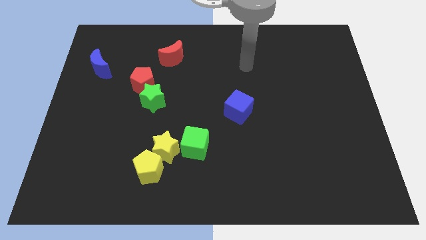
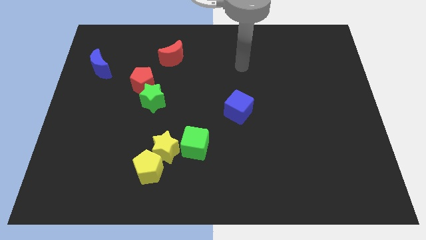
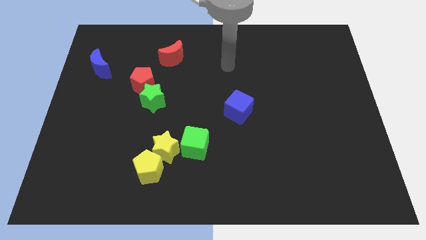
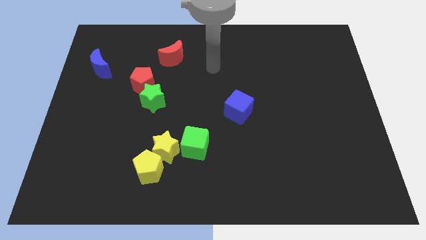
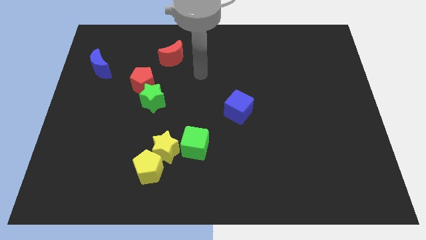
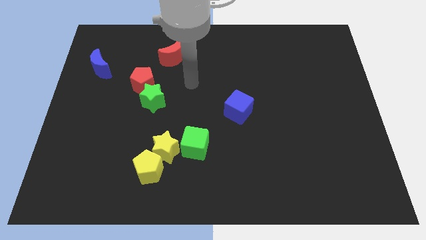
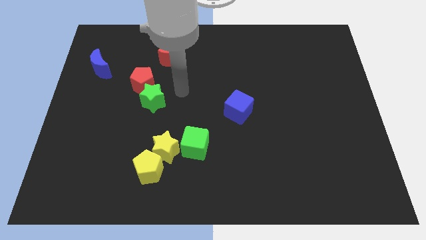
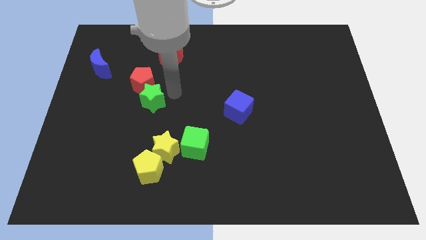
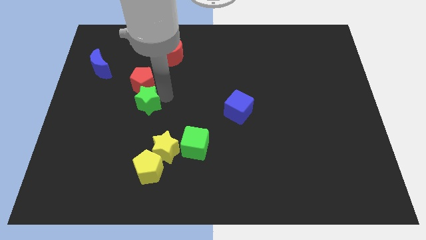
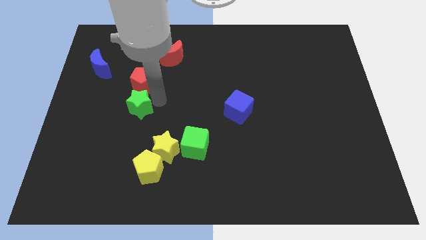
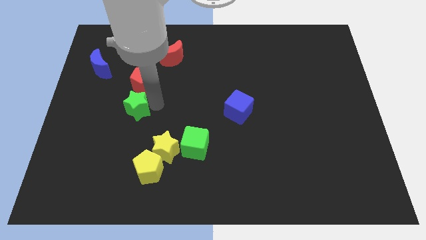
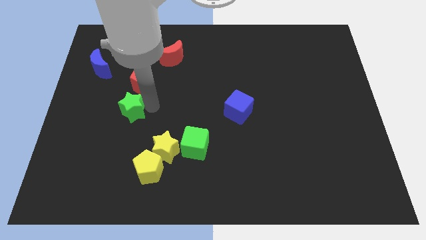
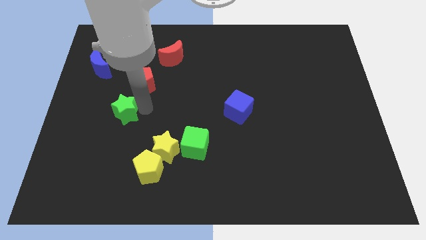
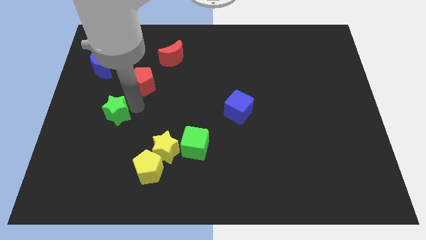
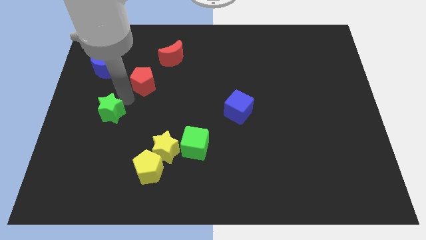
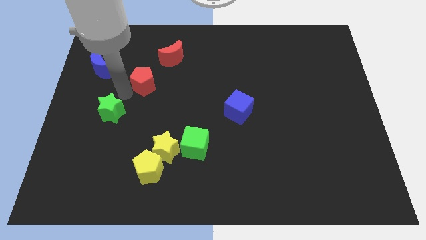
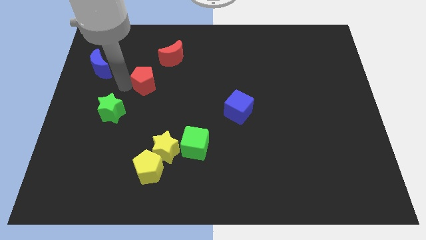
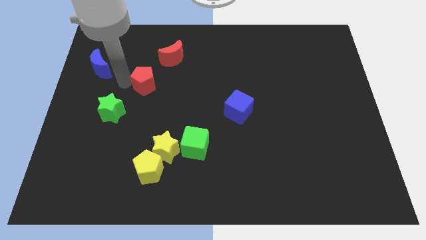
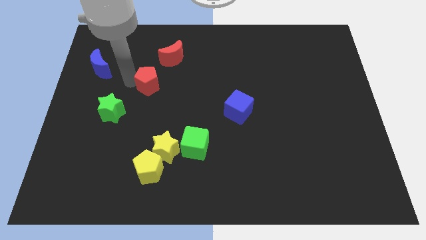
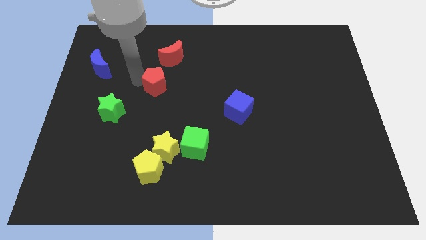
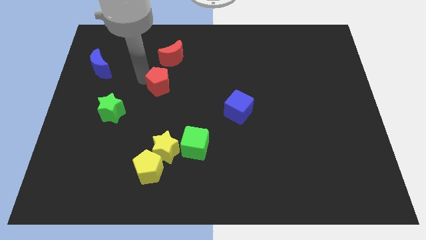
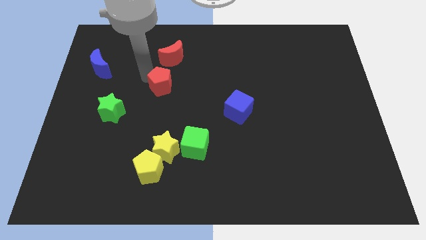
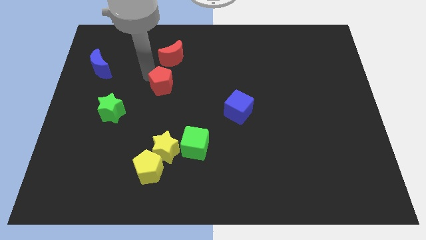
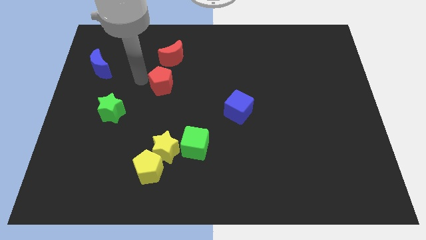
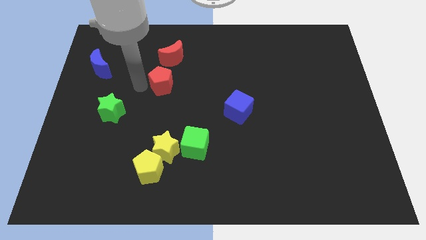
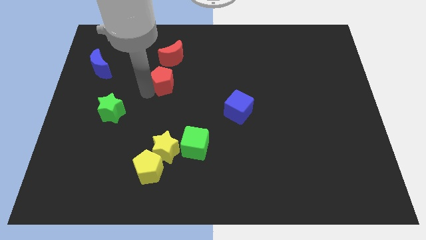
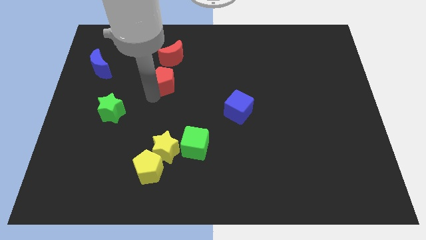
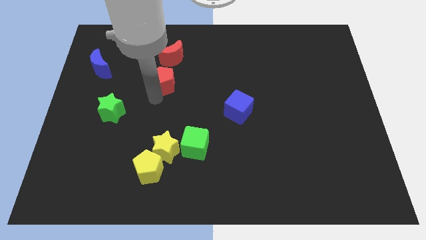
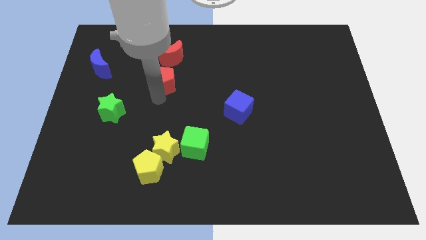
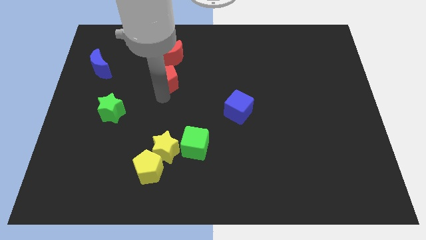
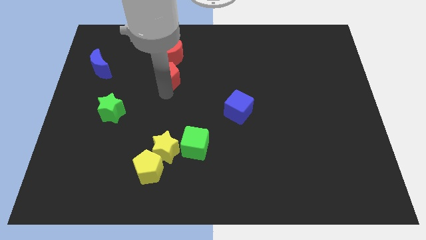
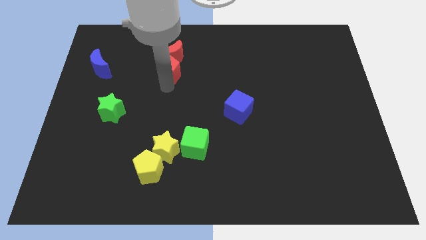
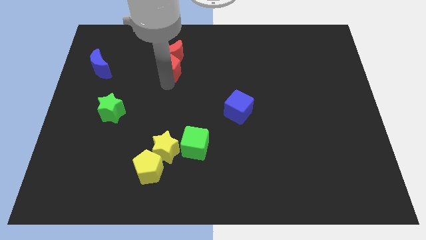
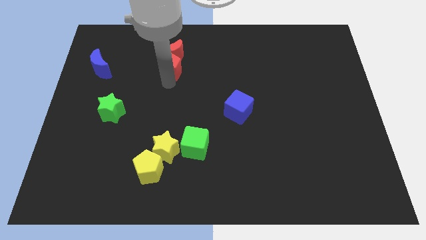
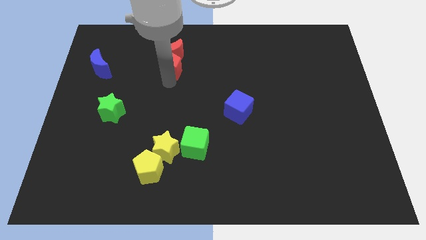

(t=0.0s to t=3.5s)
move both the red blocks and green star diagonal to each other

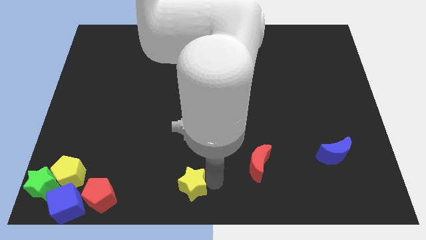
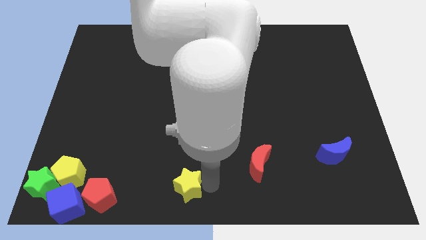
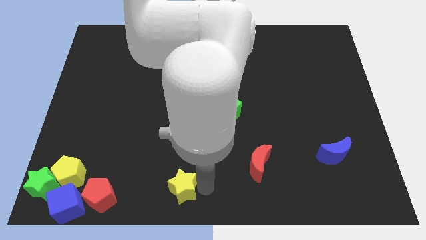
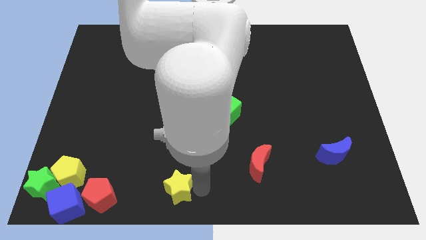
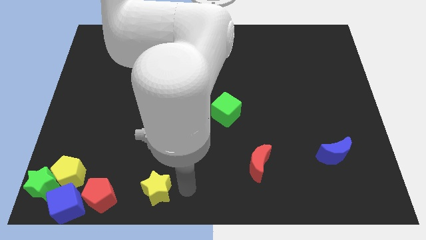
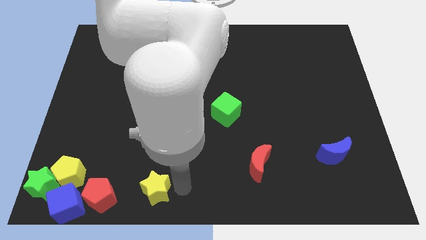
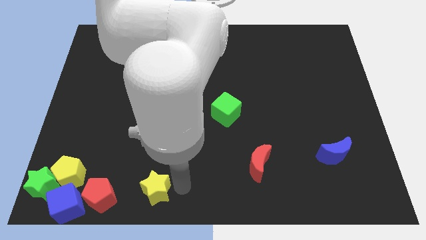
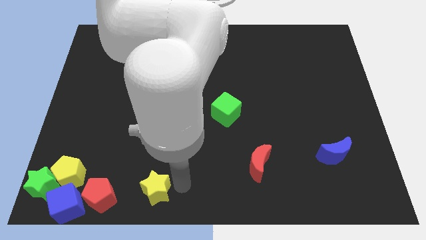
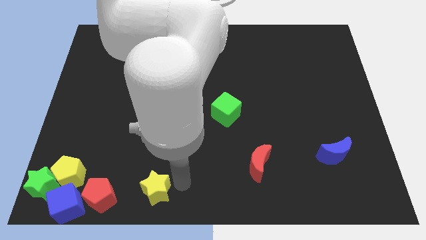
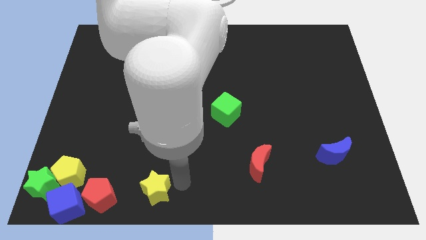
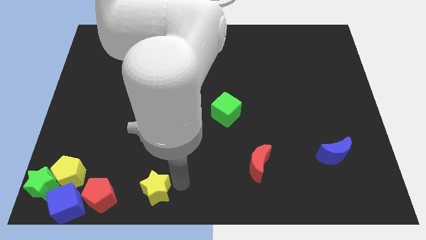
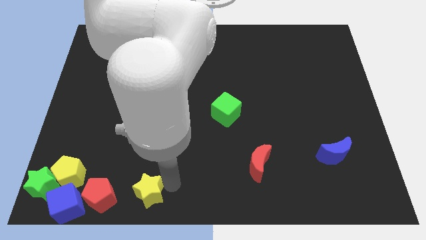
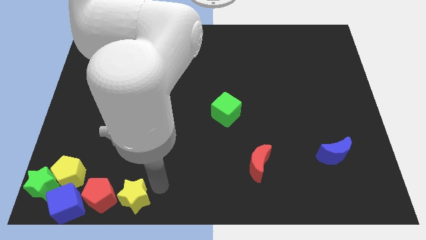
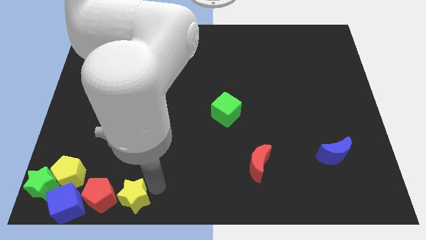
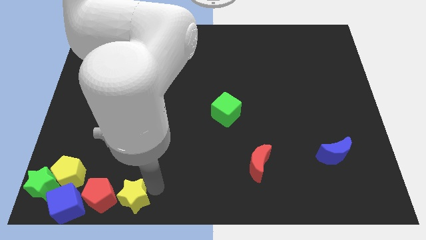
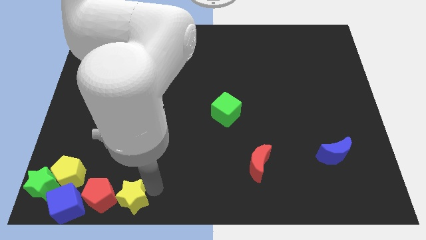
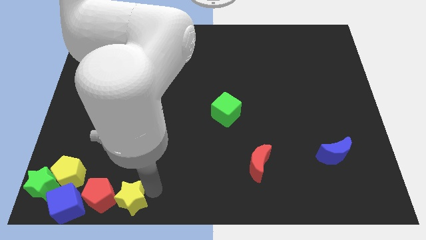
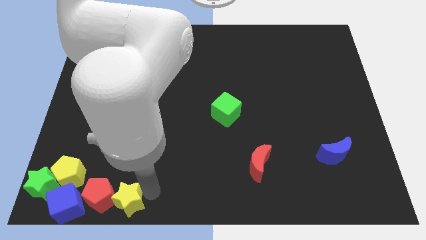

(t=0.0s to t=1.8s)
push the yellow star to the right of the red pentagon

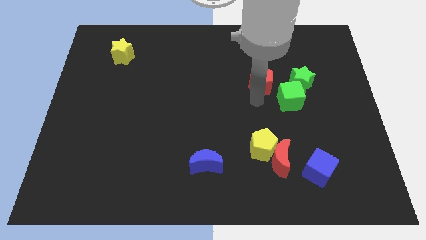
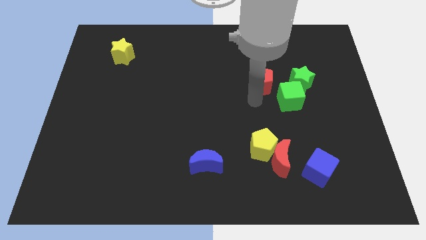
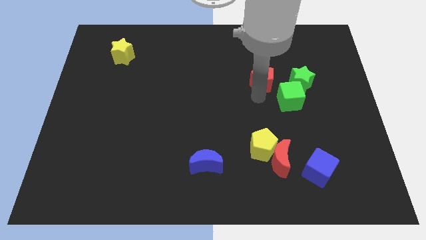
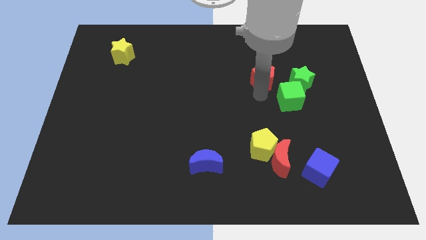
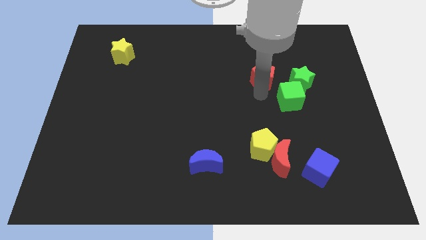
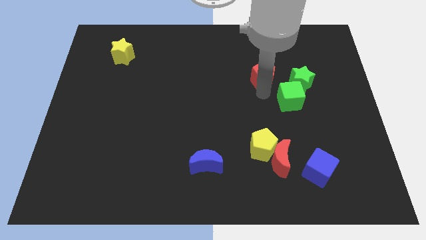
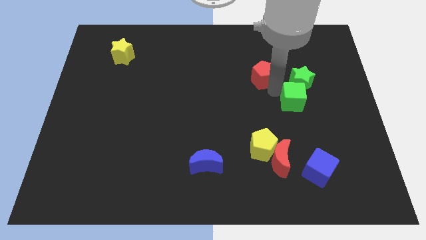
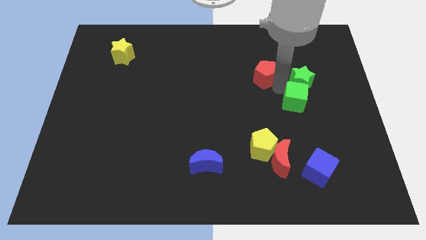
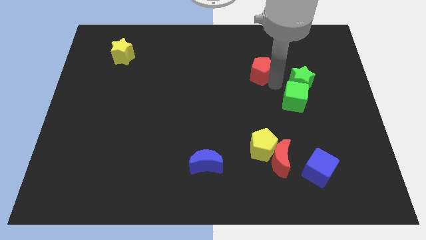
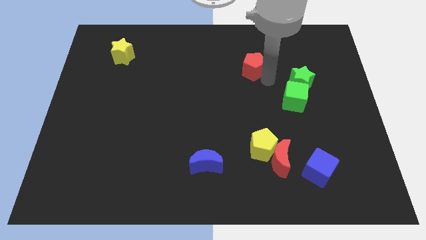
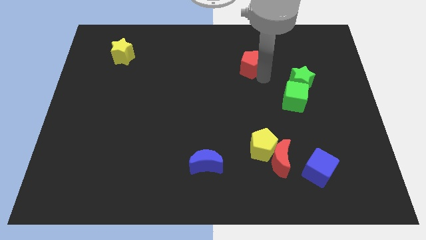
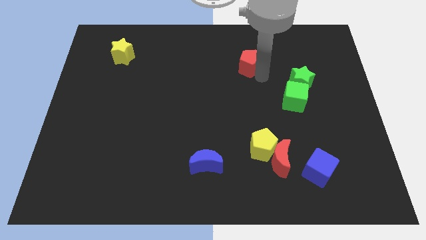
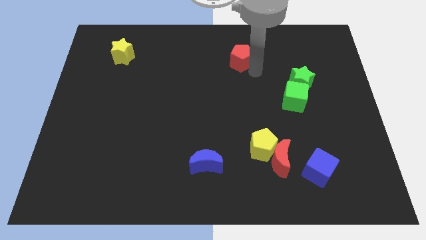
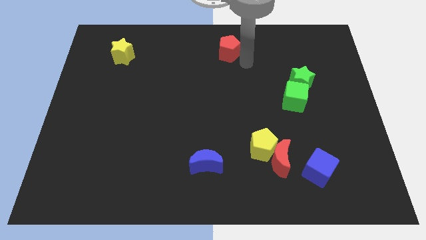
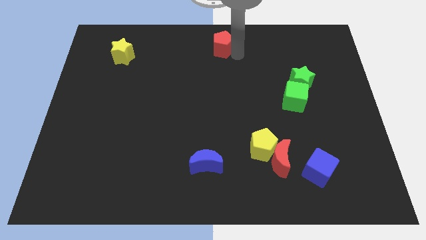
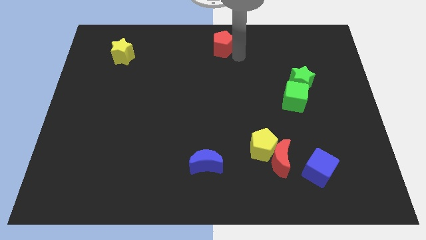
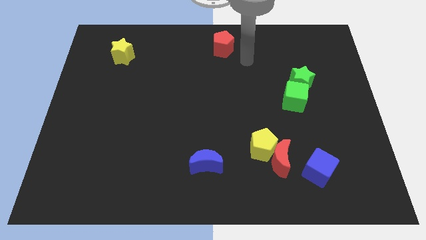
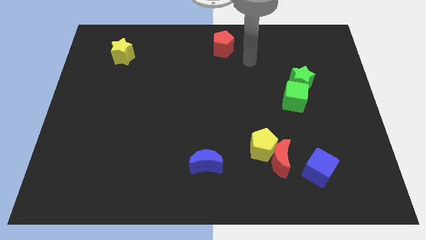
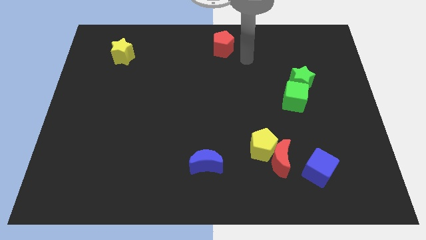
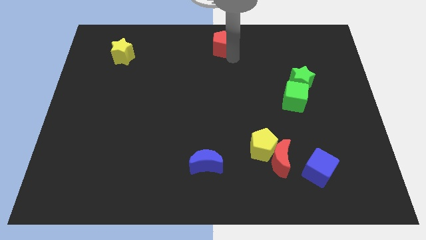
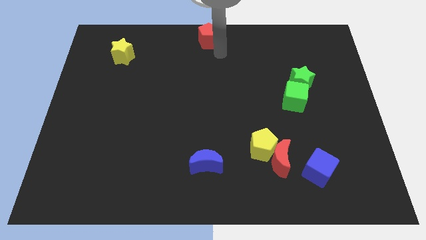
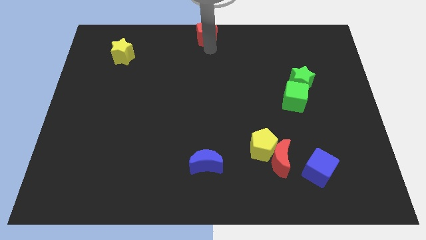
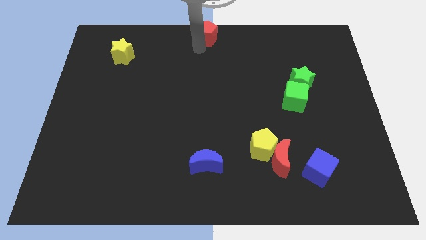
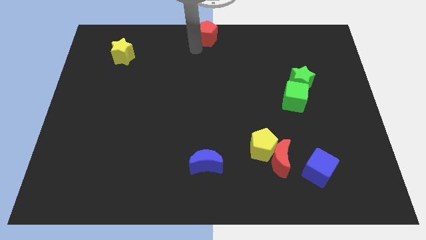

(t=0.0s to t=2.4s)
move the red pentagon to the top center of the board

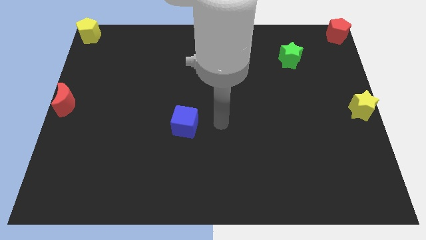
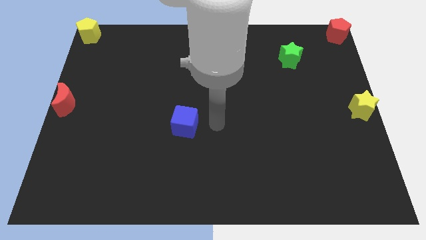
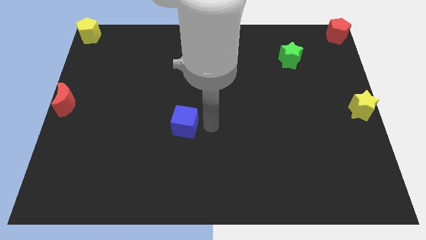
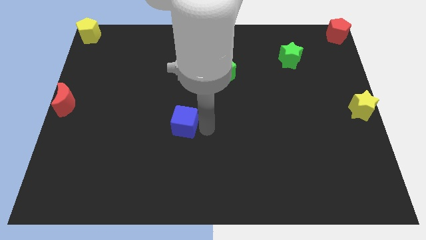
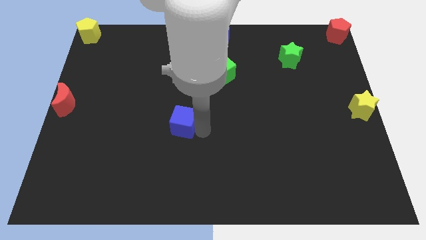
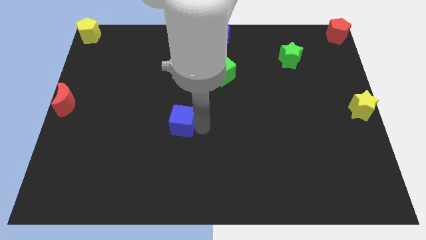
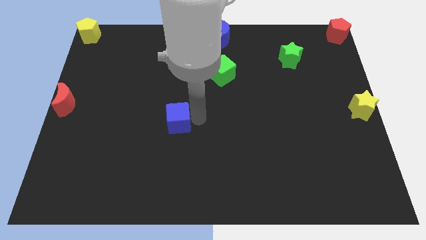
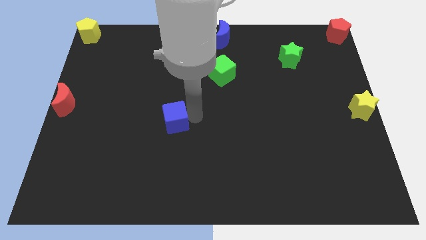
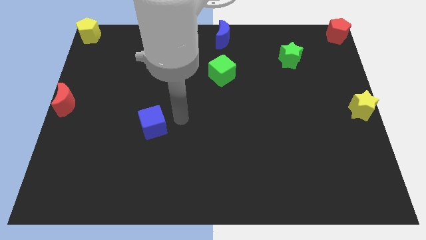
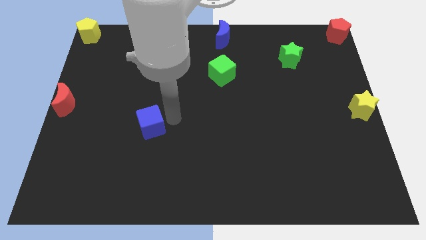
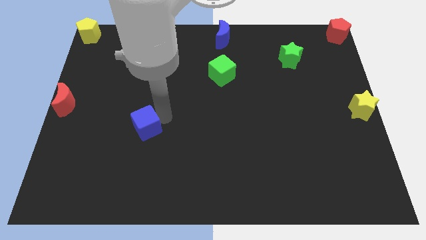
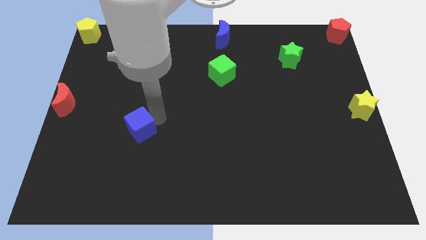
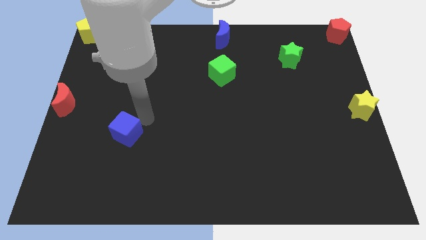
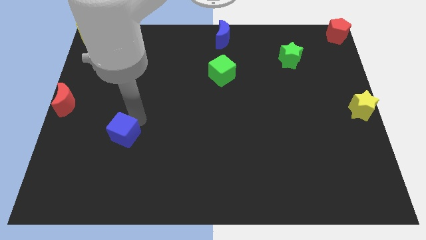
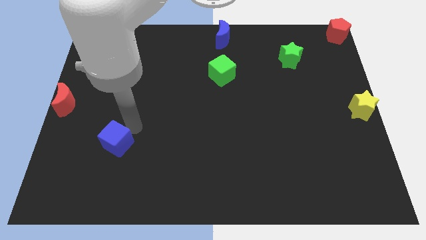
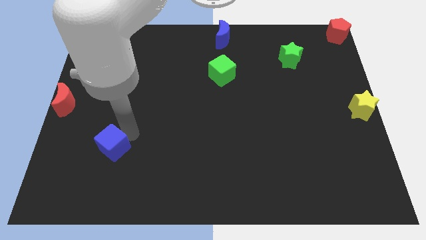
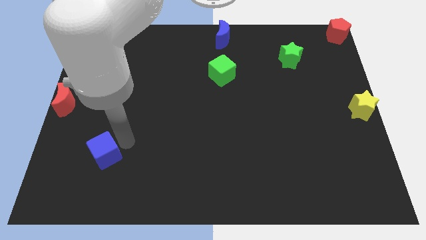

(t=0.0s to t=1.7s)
move the blue cube diagonally on the bottom right side of the red crescent
